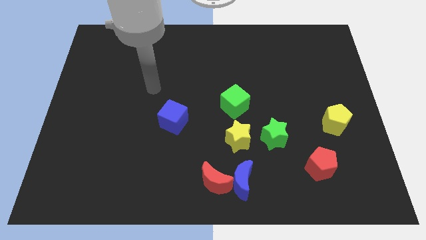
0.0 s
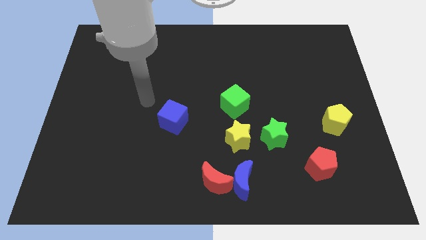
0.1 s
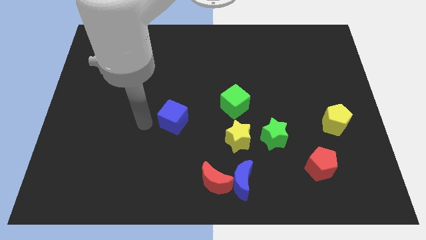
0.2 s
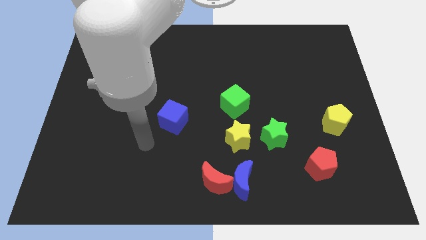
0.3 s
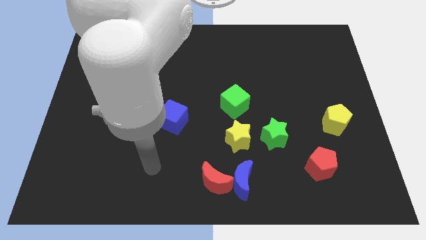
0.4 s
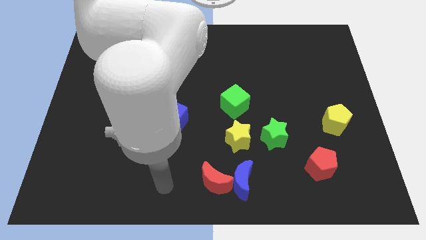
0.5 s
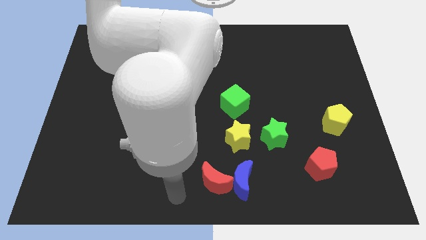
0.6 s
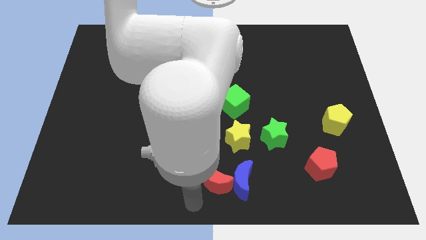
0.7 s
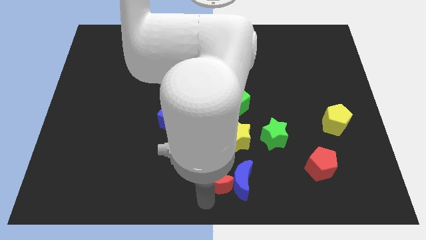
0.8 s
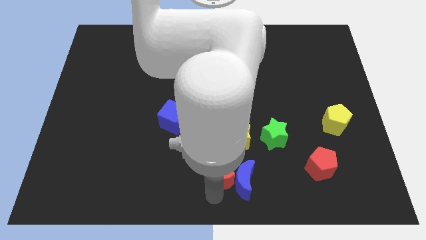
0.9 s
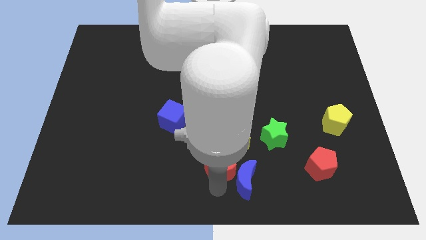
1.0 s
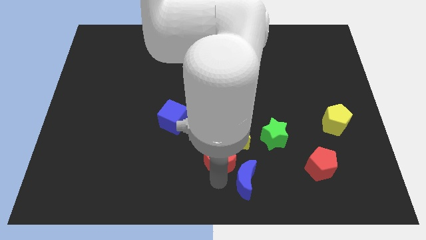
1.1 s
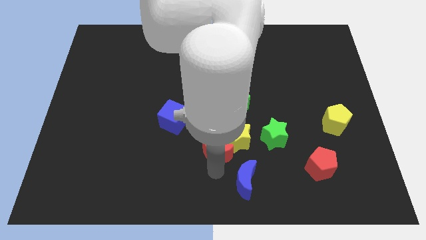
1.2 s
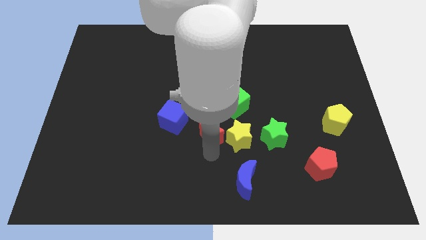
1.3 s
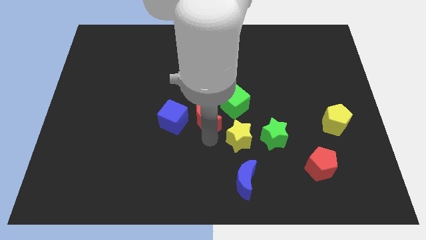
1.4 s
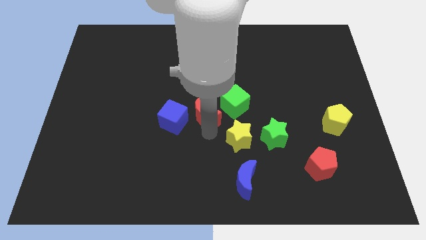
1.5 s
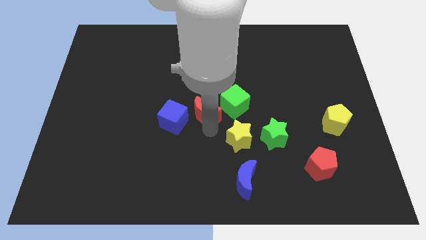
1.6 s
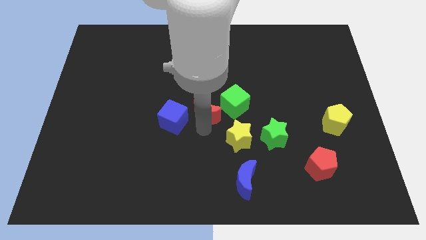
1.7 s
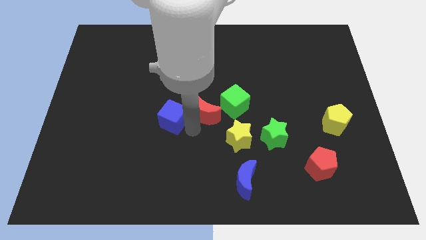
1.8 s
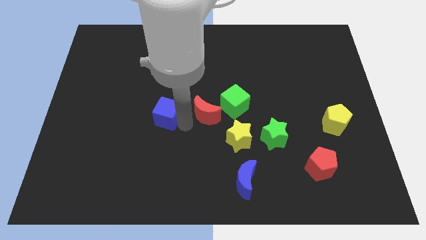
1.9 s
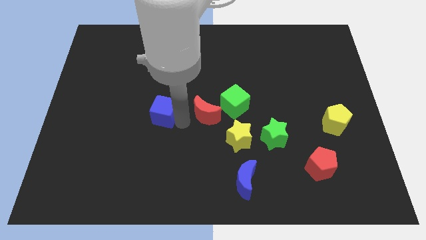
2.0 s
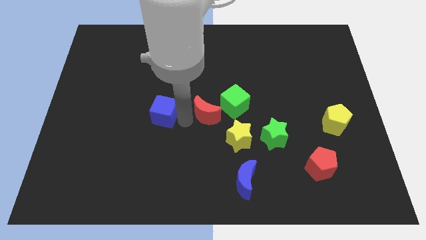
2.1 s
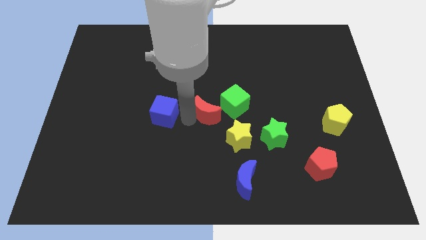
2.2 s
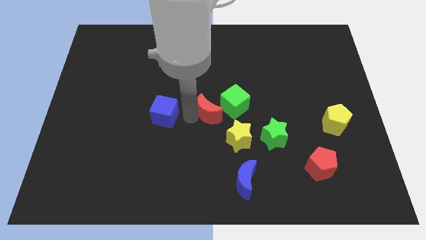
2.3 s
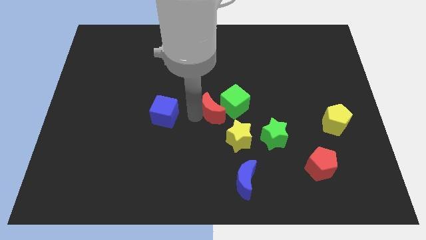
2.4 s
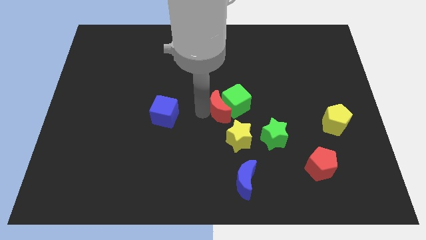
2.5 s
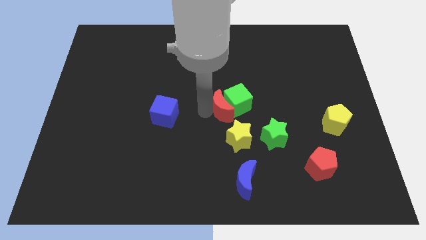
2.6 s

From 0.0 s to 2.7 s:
move the red moon close to the green cube

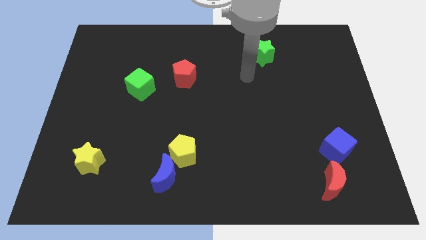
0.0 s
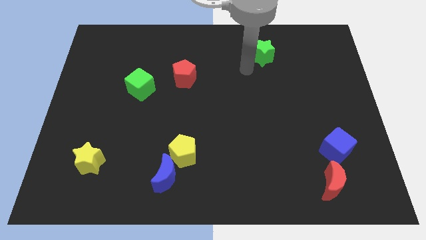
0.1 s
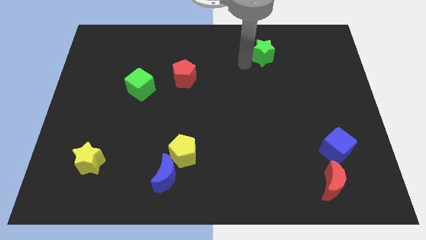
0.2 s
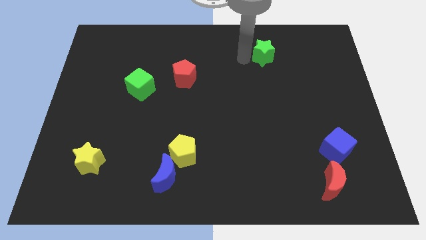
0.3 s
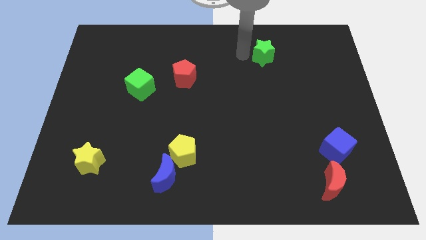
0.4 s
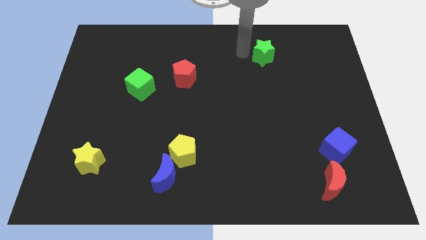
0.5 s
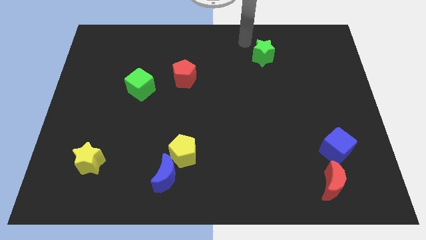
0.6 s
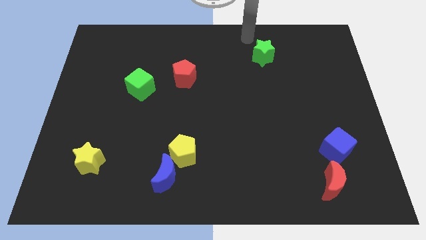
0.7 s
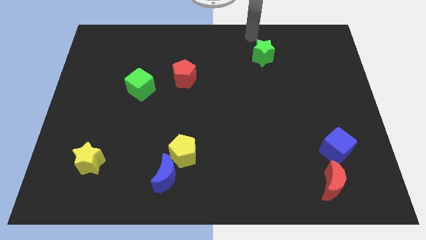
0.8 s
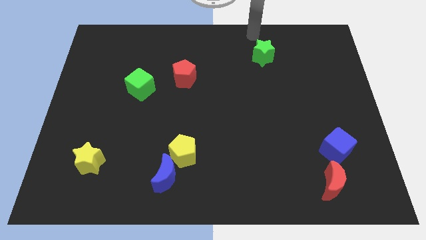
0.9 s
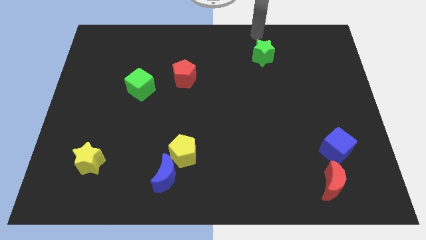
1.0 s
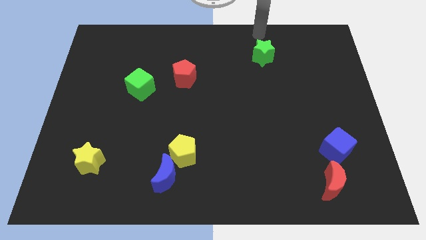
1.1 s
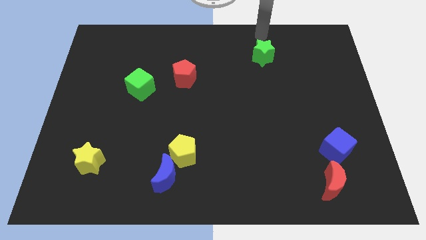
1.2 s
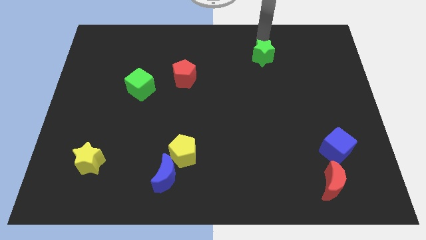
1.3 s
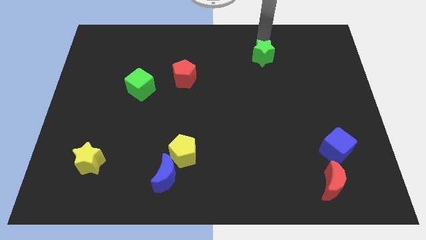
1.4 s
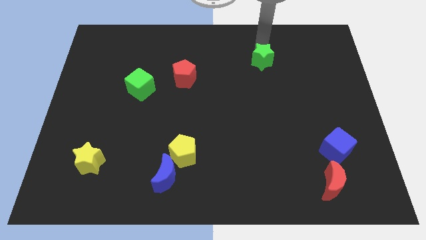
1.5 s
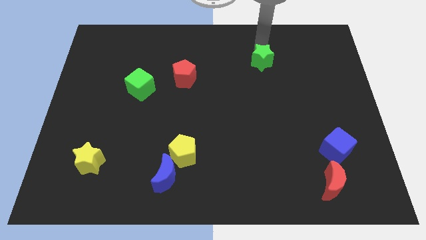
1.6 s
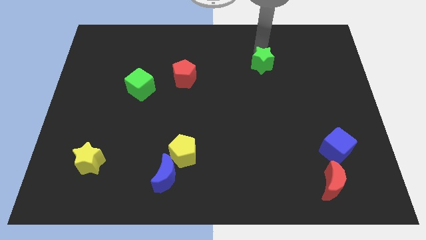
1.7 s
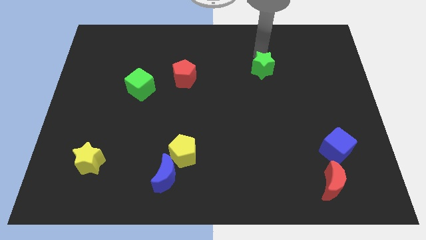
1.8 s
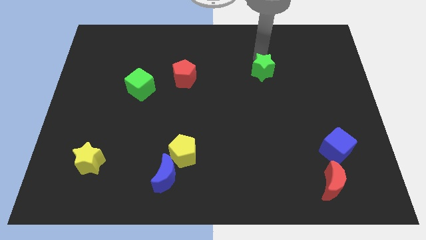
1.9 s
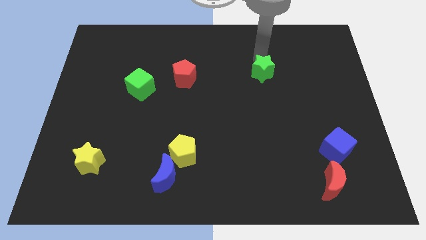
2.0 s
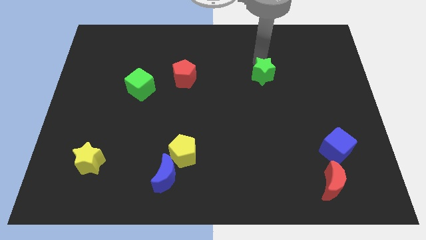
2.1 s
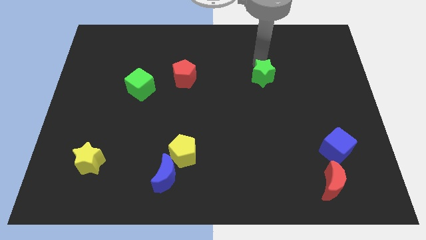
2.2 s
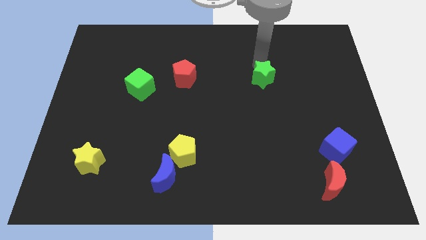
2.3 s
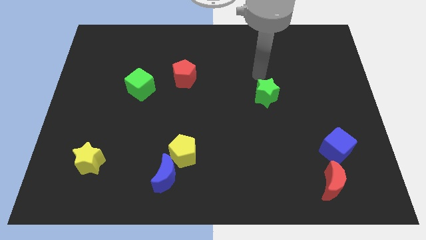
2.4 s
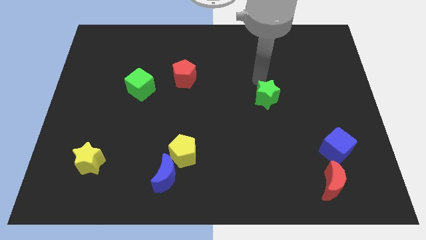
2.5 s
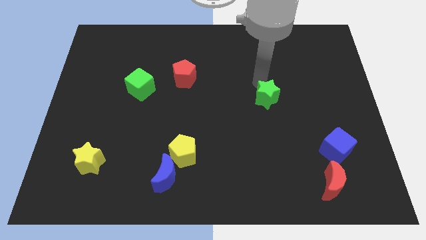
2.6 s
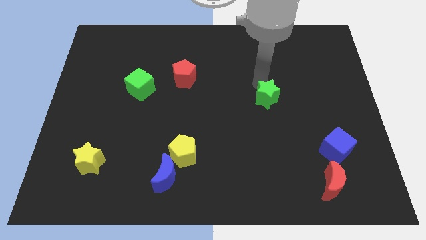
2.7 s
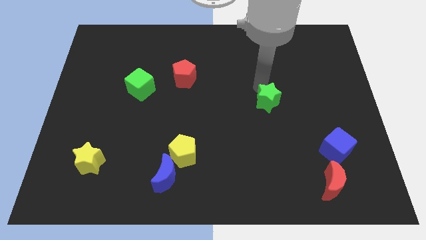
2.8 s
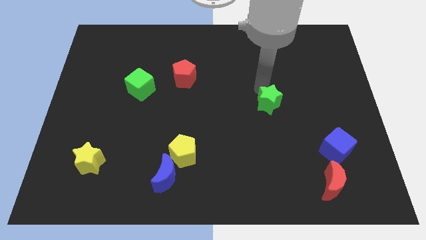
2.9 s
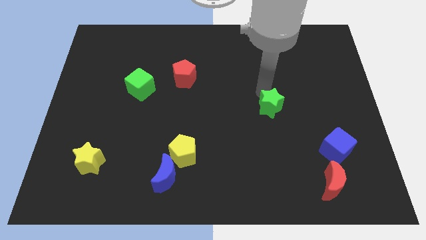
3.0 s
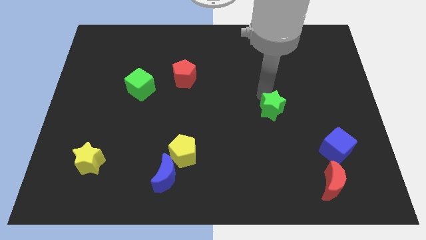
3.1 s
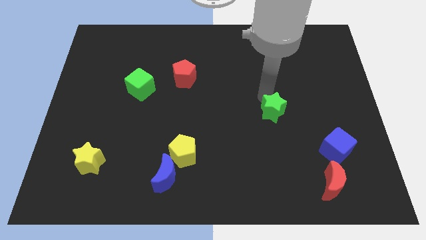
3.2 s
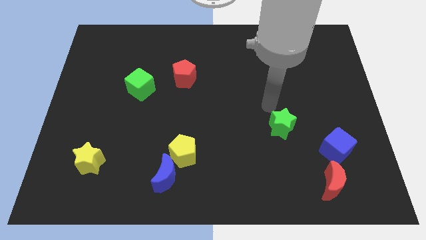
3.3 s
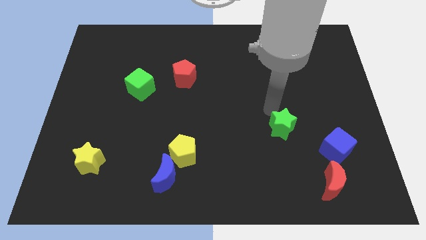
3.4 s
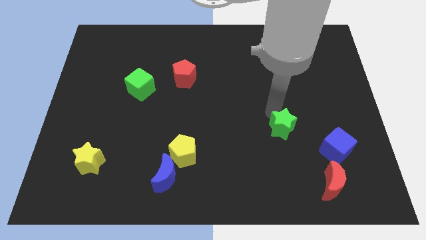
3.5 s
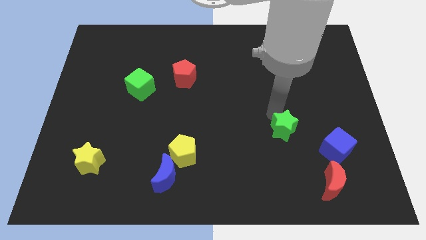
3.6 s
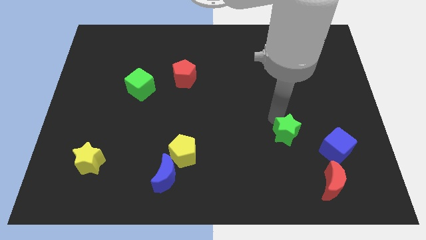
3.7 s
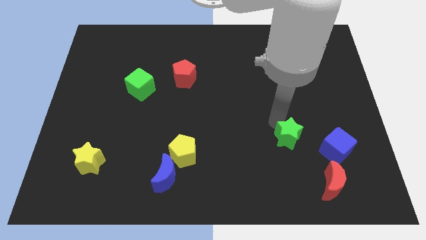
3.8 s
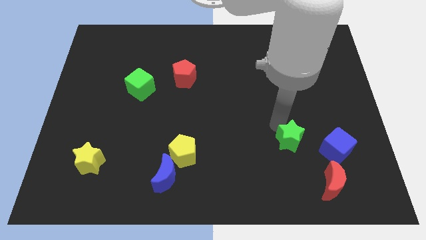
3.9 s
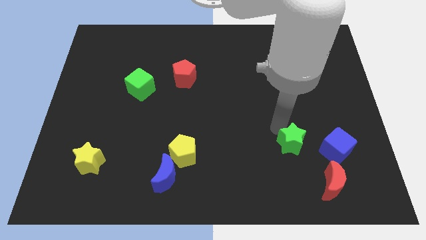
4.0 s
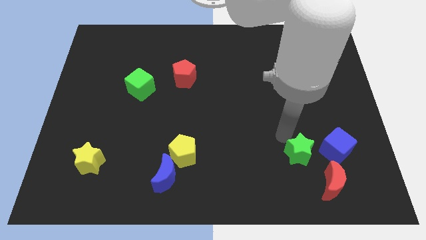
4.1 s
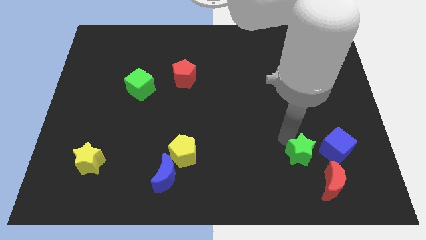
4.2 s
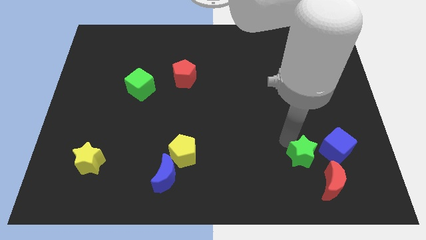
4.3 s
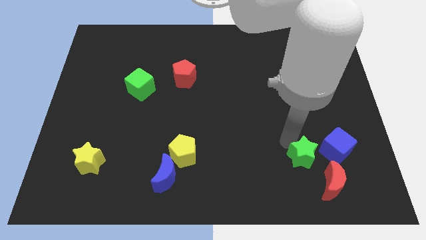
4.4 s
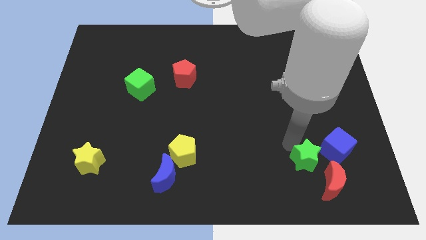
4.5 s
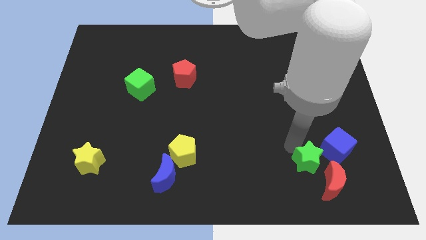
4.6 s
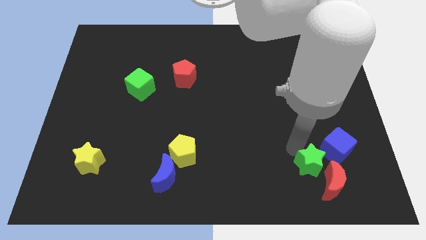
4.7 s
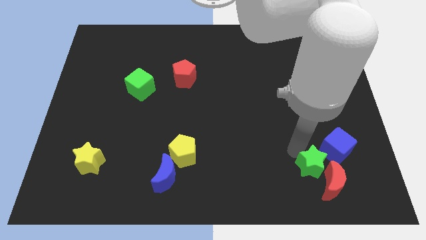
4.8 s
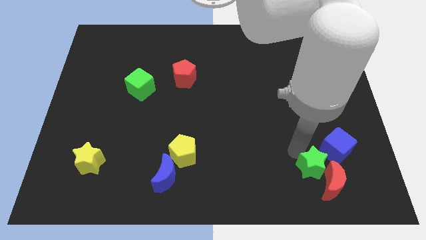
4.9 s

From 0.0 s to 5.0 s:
slide the green star next to the red moon

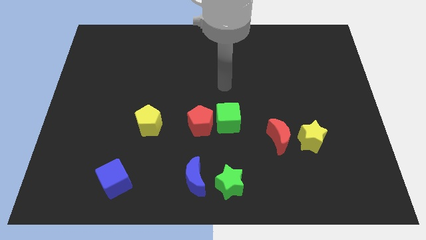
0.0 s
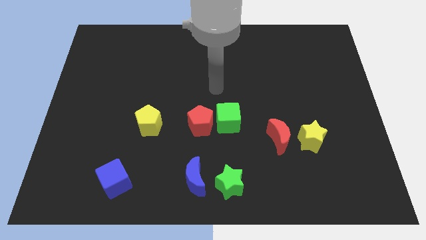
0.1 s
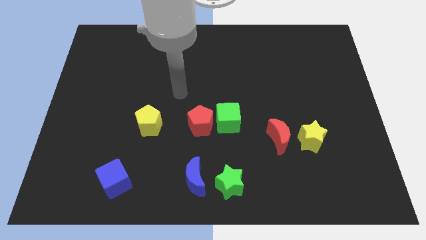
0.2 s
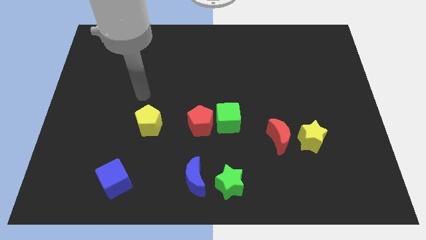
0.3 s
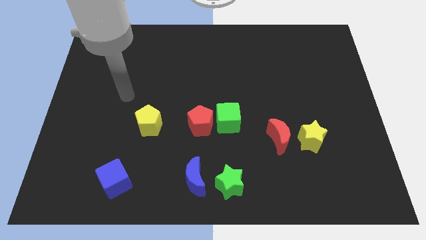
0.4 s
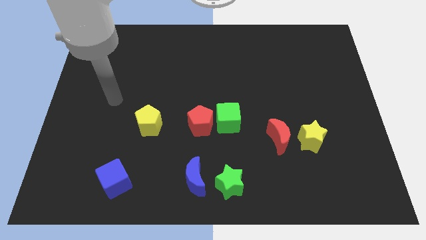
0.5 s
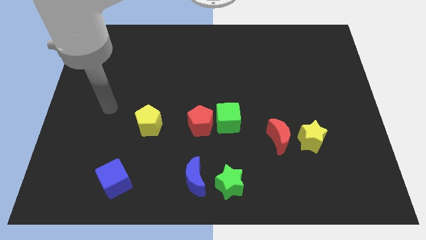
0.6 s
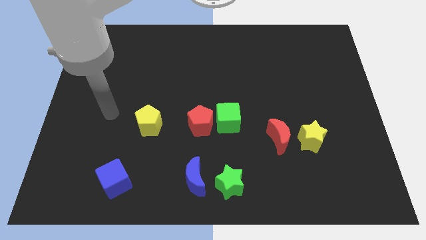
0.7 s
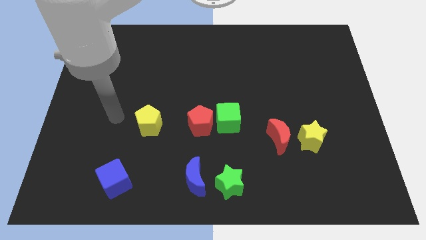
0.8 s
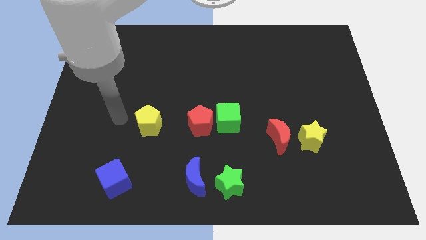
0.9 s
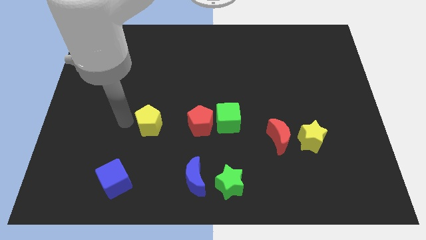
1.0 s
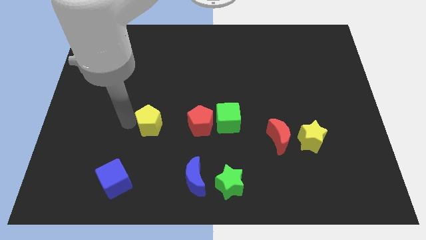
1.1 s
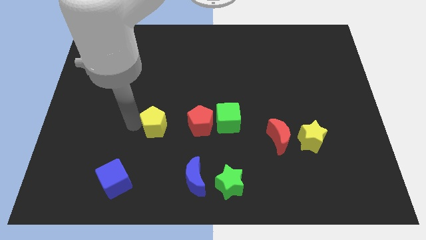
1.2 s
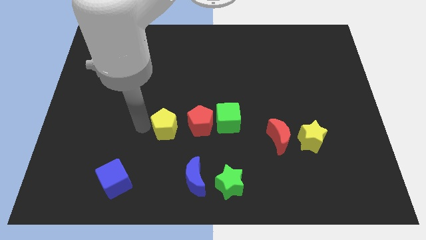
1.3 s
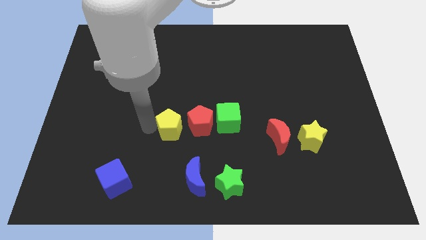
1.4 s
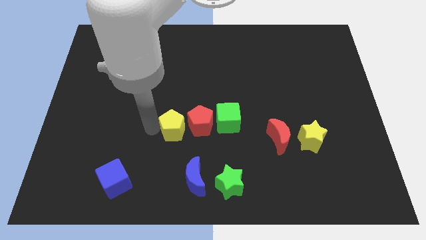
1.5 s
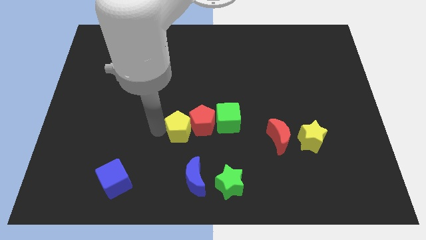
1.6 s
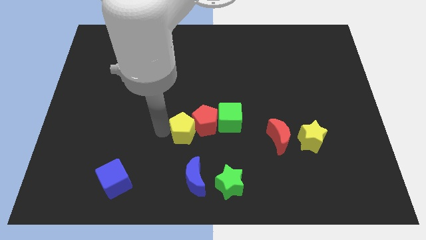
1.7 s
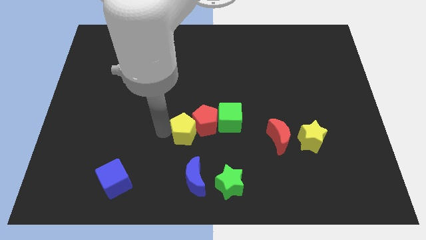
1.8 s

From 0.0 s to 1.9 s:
move the yellow pentagon towards the red pentagon
